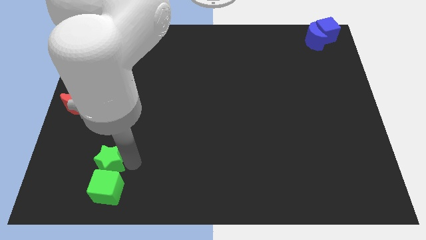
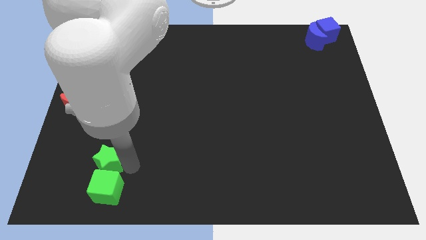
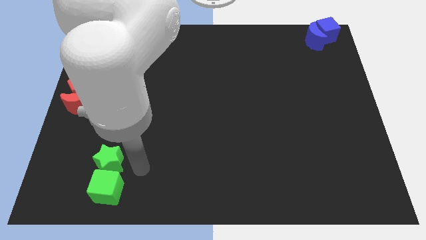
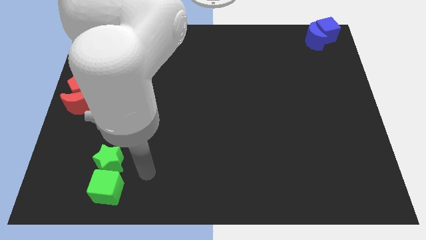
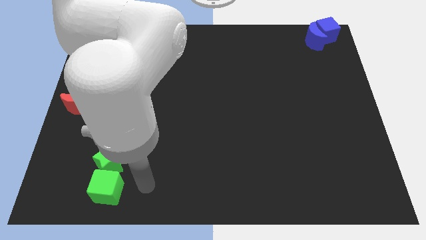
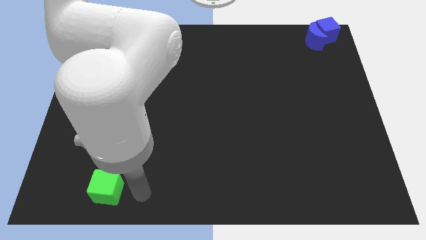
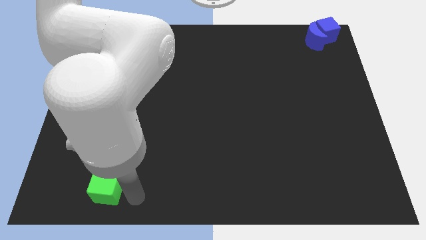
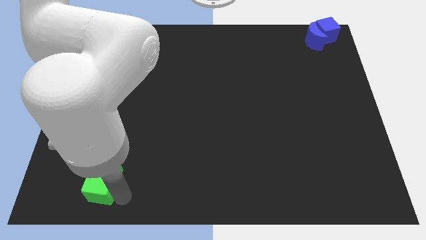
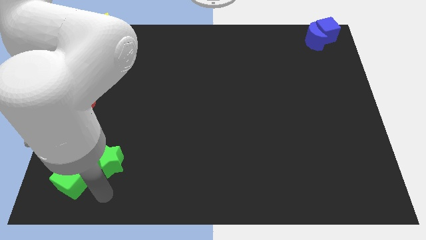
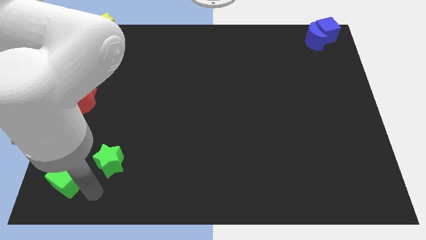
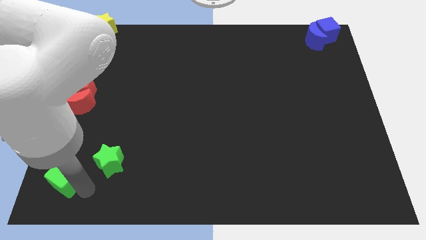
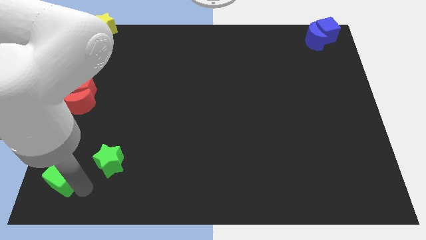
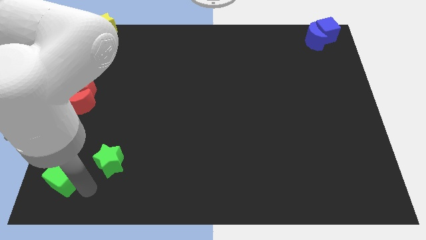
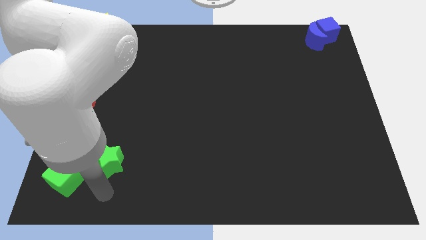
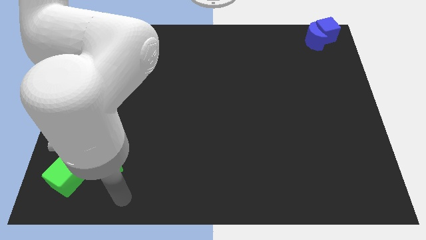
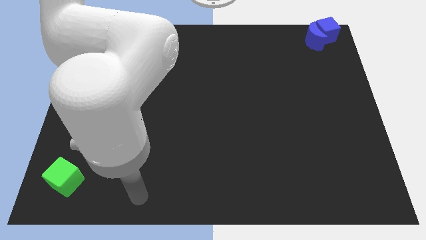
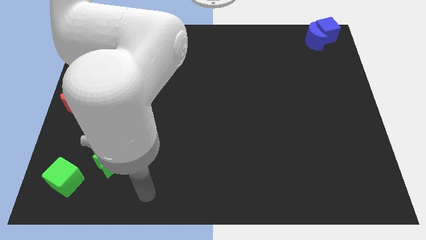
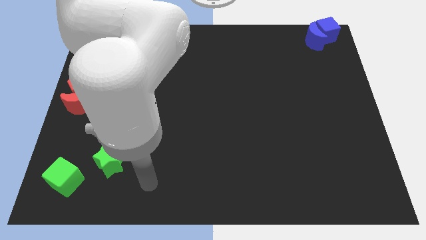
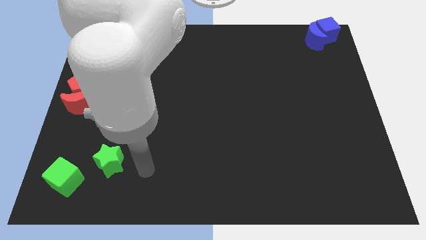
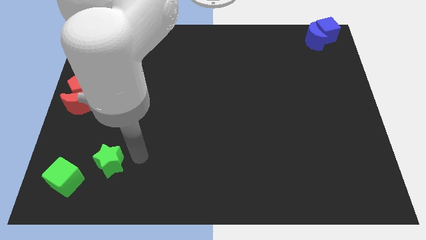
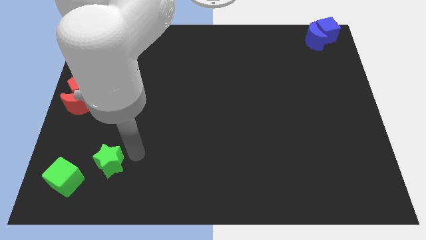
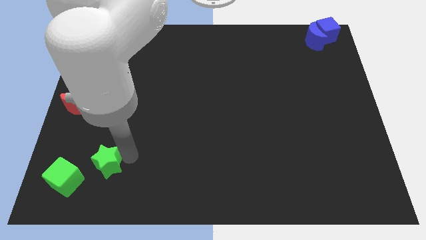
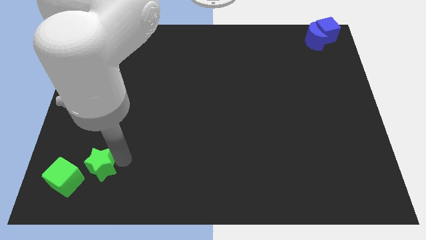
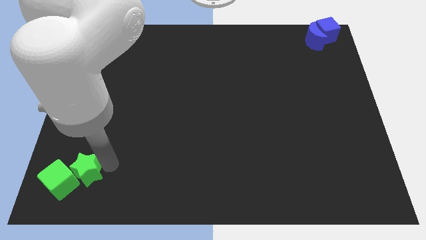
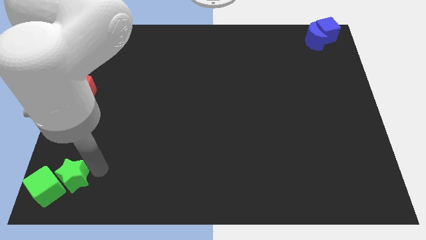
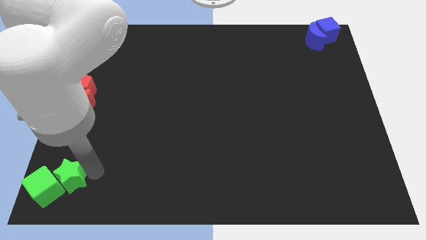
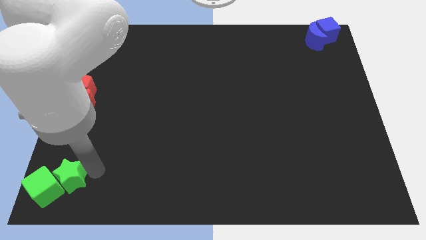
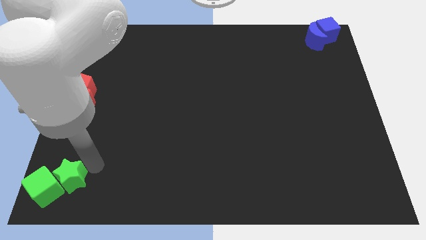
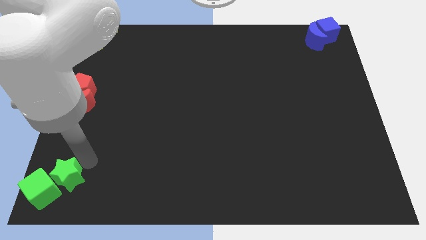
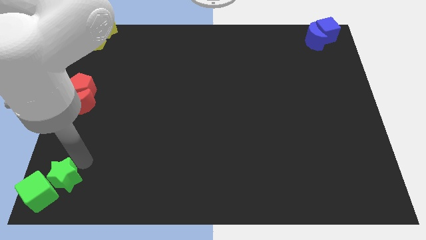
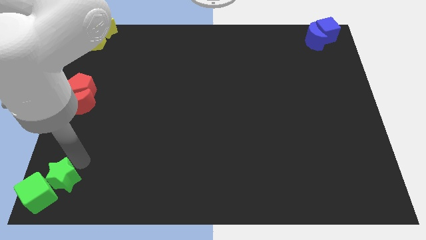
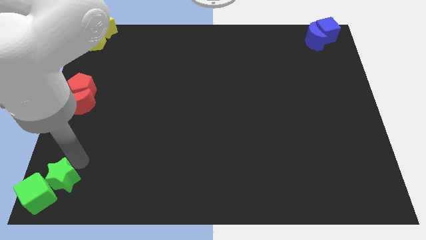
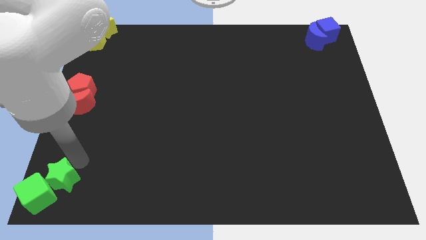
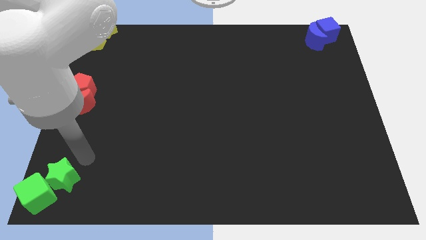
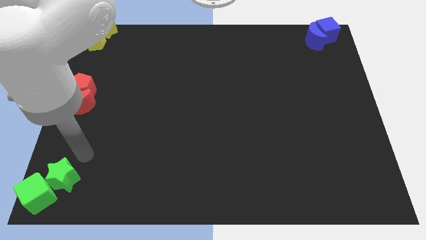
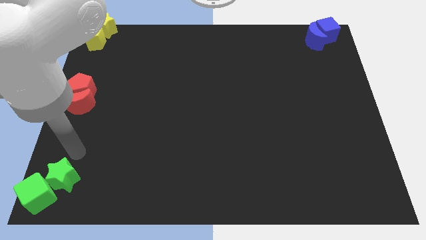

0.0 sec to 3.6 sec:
push the green star and green cube to the bottom left corner

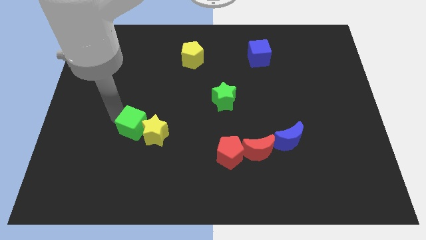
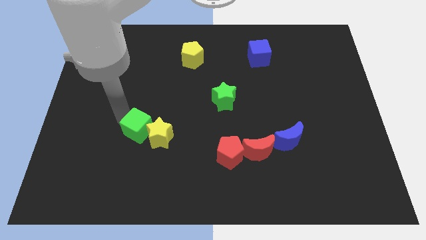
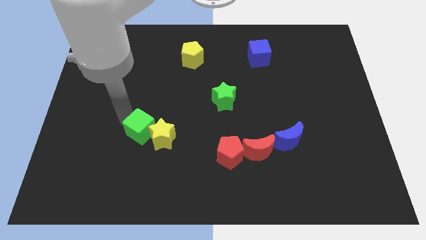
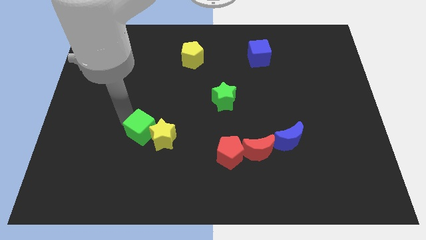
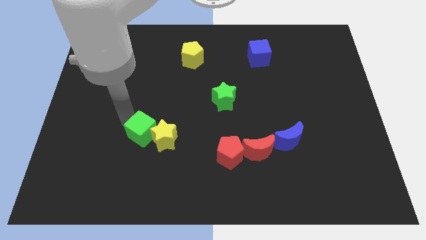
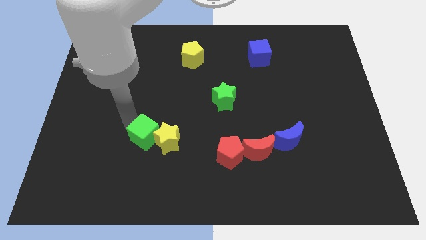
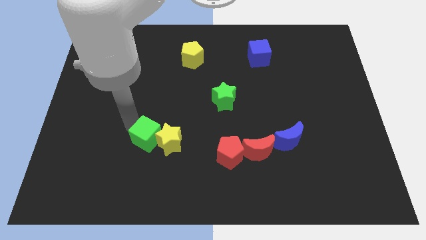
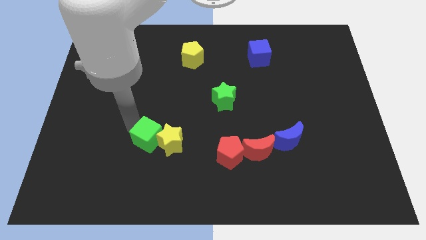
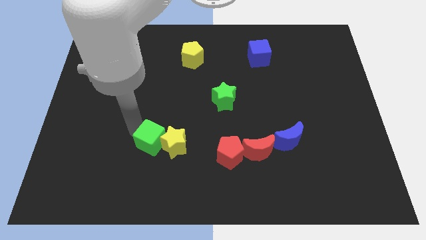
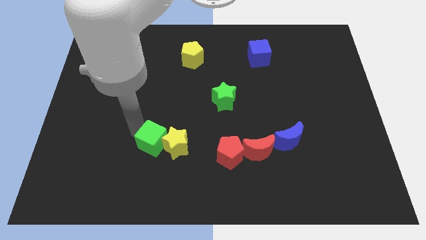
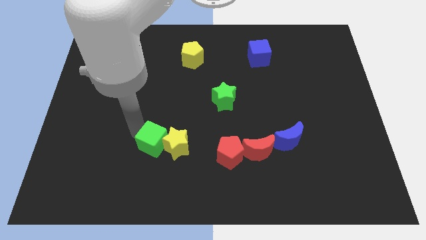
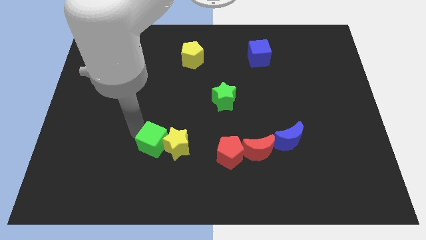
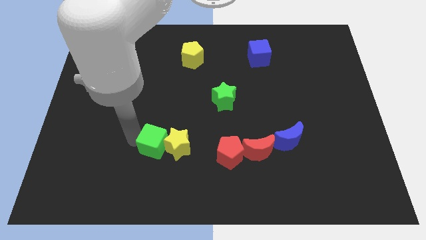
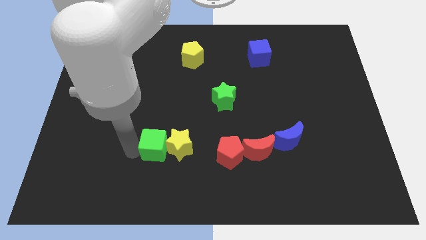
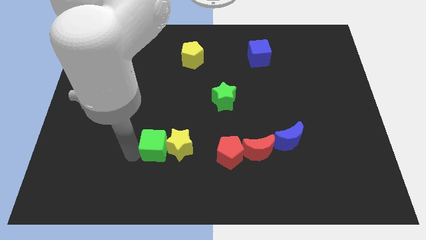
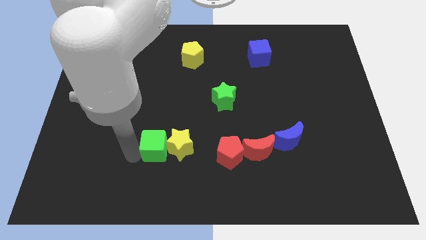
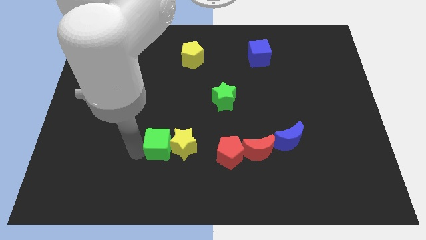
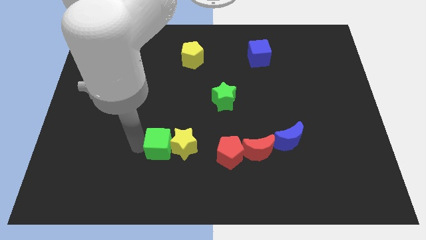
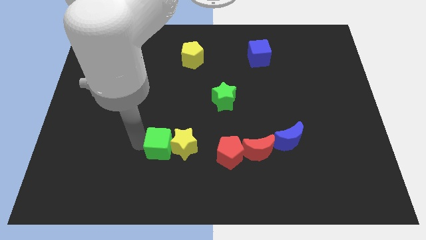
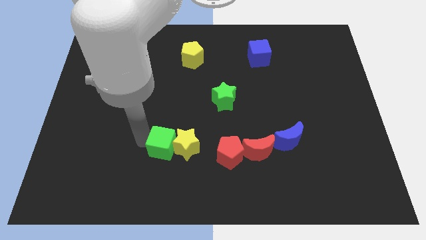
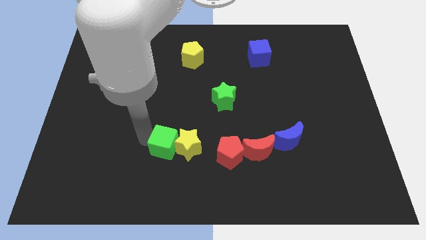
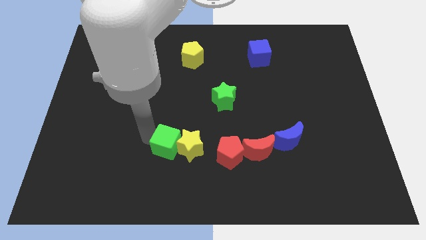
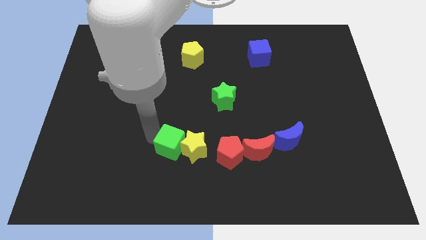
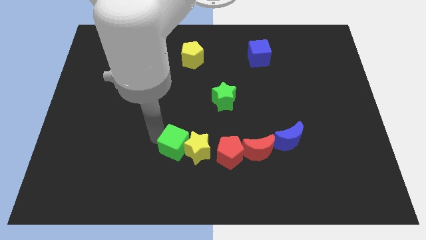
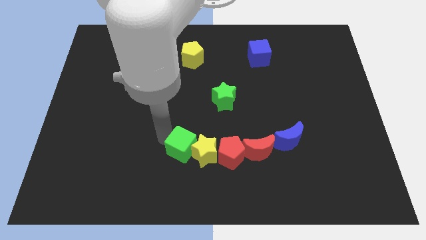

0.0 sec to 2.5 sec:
push the green cube along with the yellow star into the line of blocks

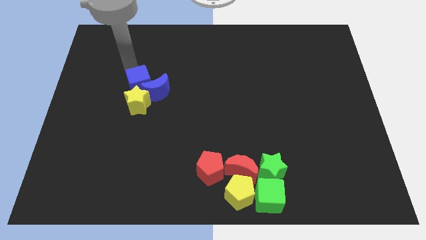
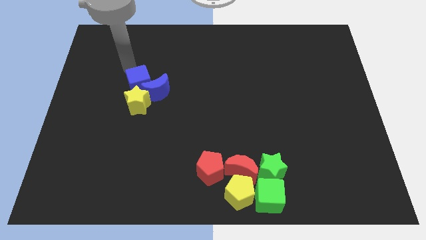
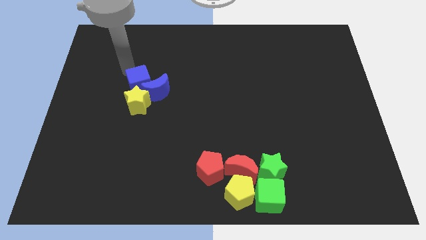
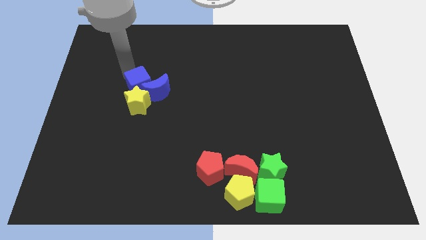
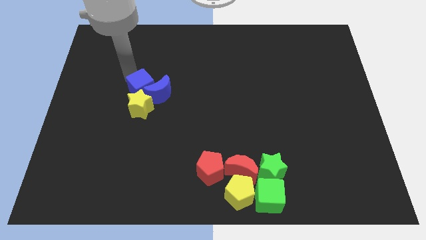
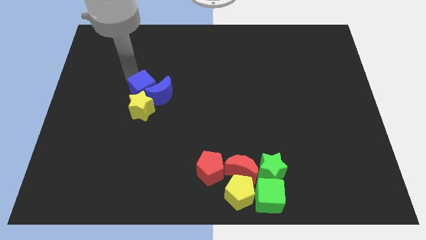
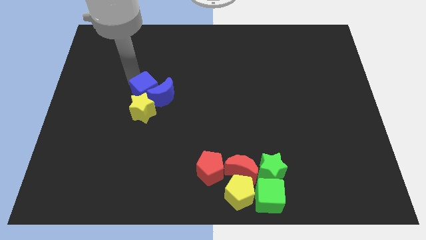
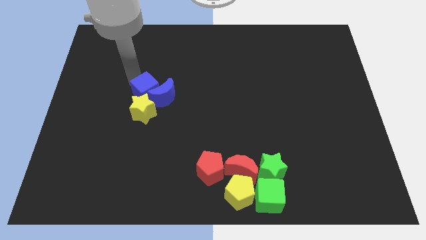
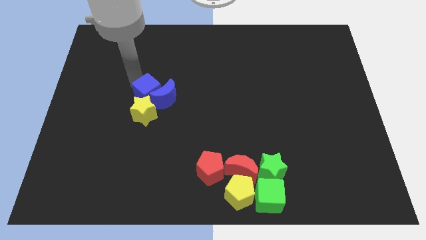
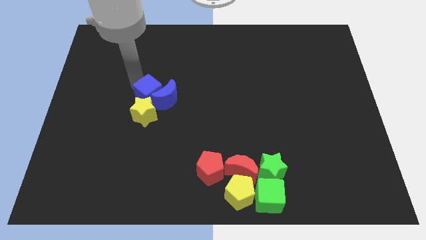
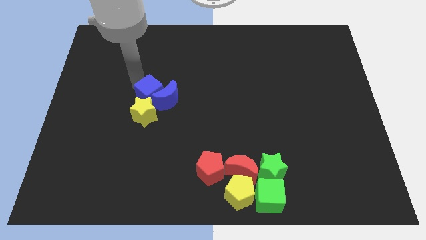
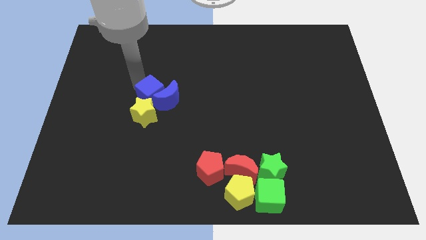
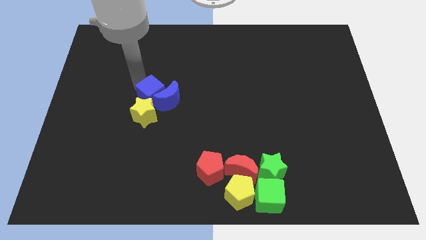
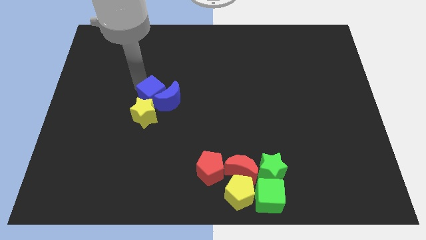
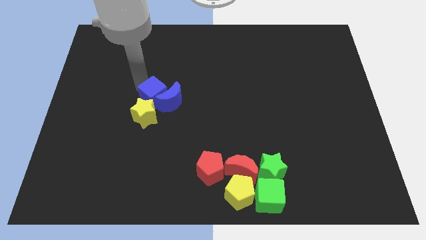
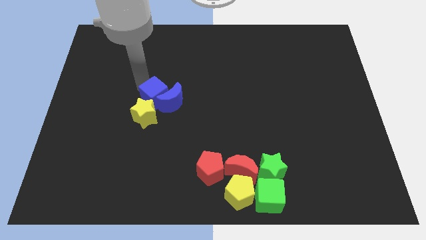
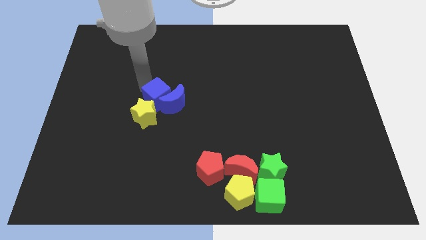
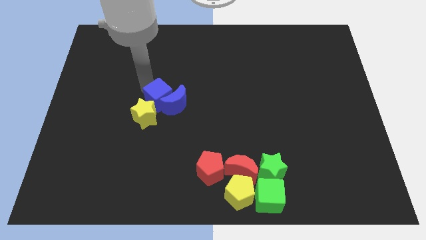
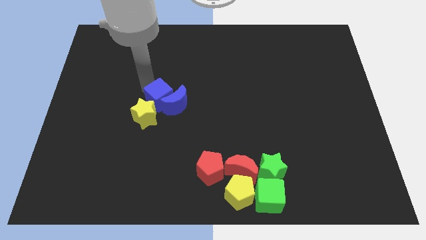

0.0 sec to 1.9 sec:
move both the blue blocks towards the center

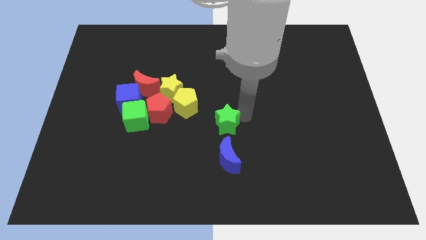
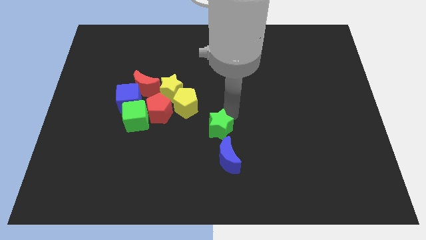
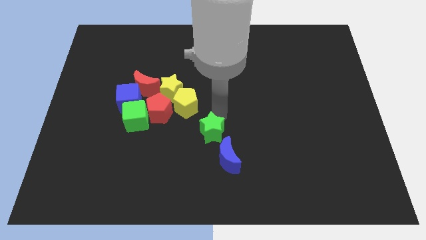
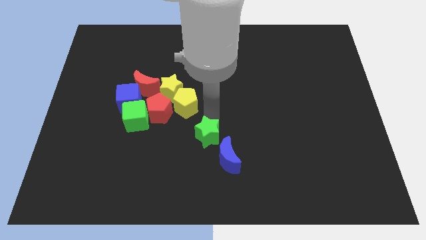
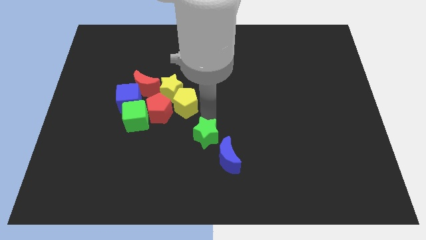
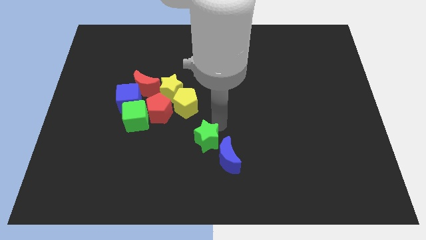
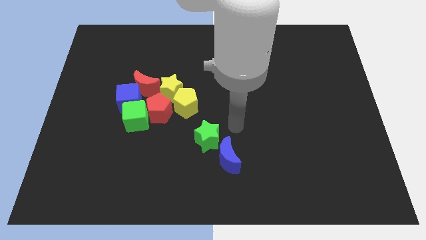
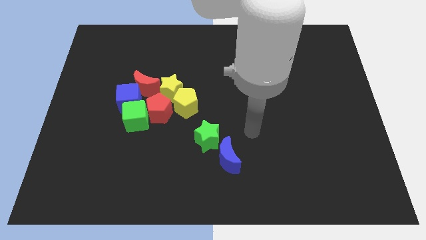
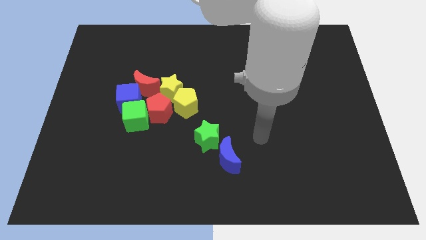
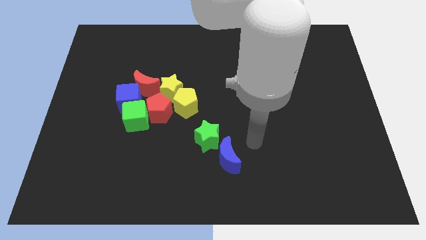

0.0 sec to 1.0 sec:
put the green star diagonal to the yellow pentagon

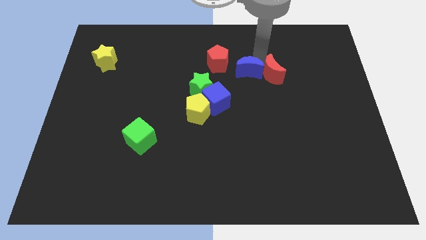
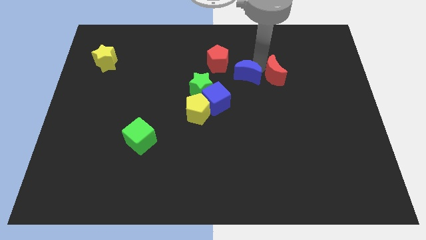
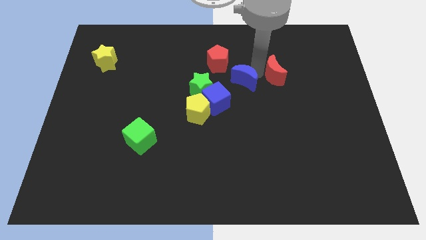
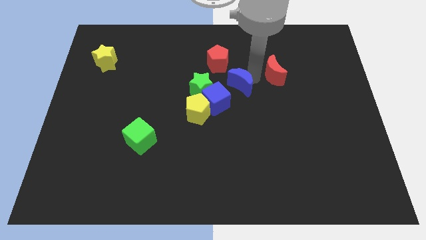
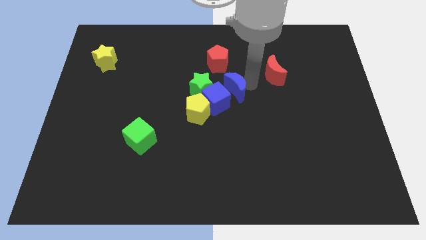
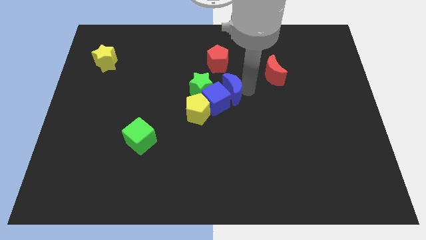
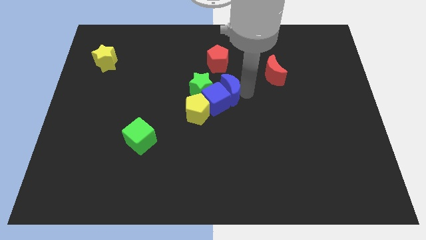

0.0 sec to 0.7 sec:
separate the red crescent and blue crescent
